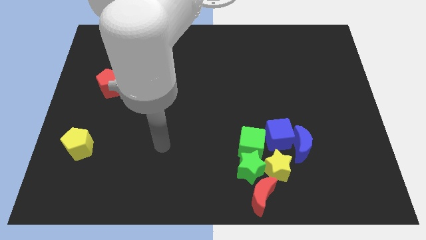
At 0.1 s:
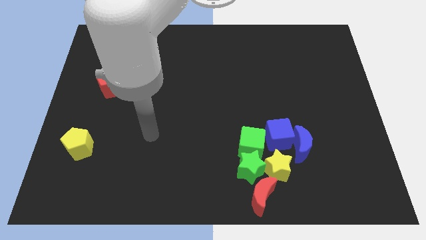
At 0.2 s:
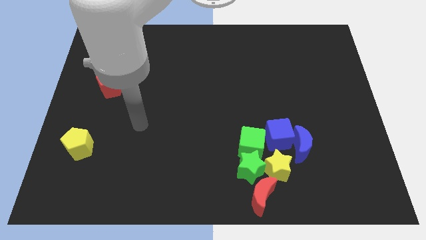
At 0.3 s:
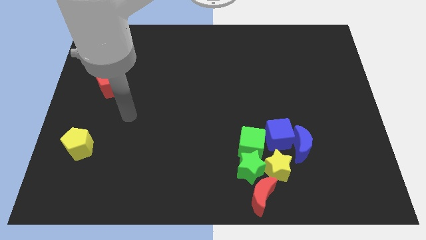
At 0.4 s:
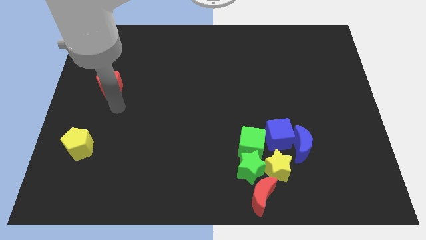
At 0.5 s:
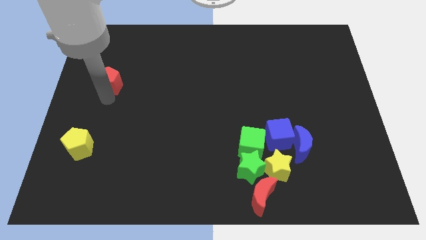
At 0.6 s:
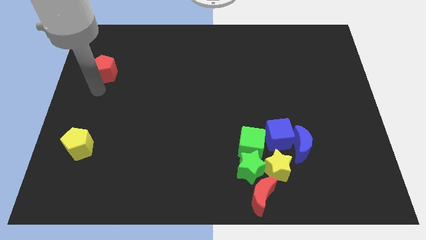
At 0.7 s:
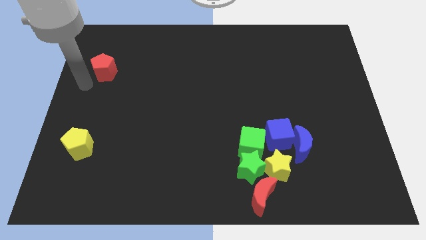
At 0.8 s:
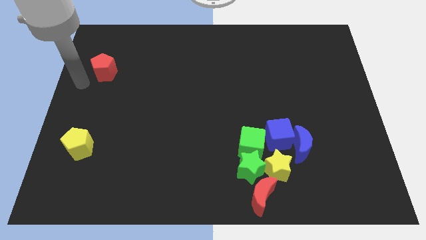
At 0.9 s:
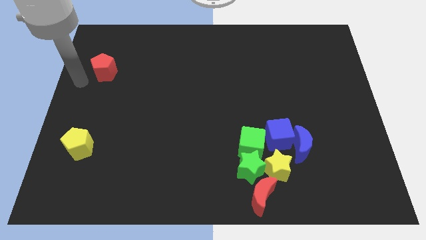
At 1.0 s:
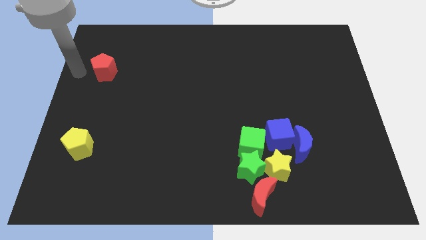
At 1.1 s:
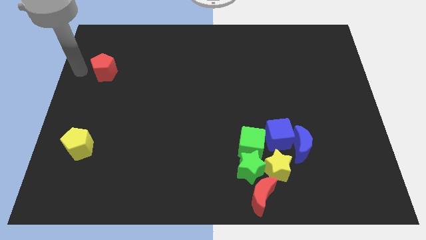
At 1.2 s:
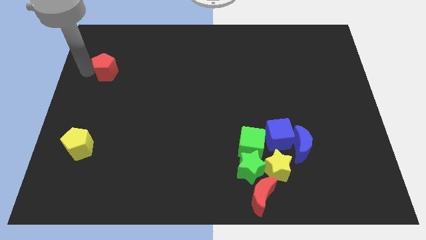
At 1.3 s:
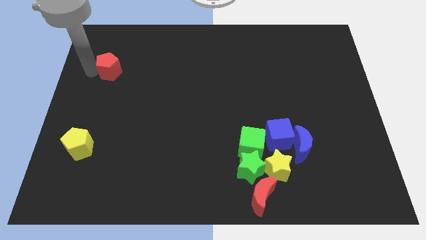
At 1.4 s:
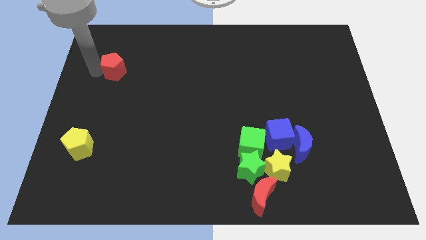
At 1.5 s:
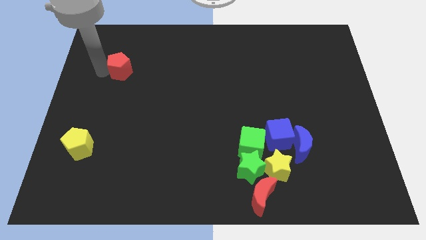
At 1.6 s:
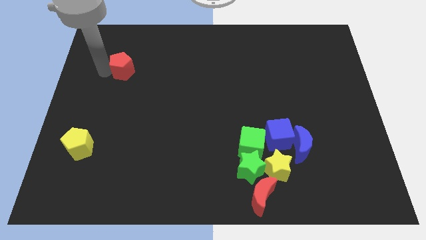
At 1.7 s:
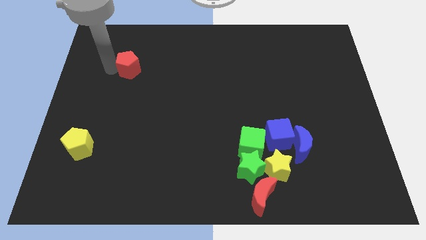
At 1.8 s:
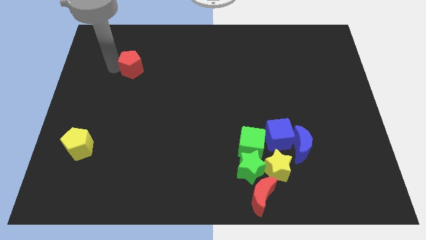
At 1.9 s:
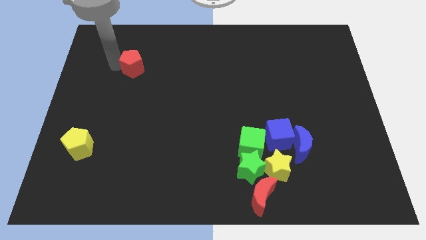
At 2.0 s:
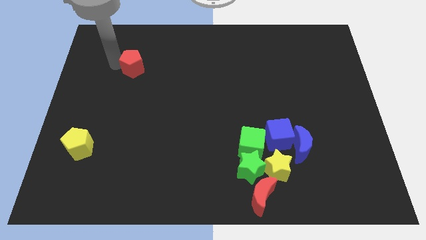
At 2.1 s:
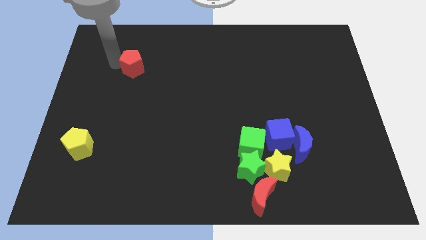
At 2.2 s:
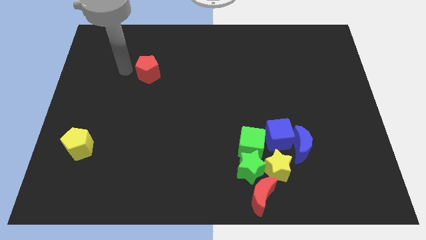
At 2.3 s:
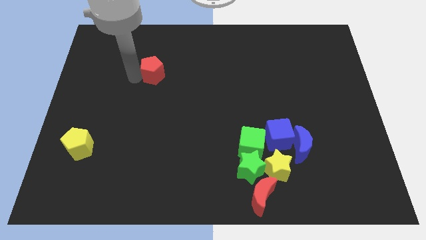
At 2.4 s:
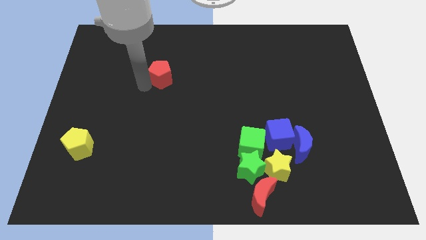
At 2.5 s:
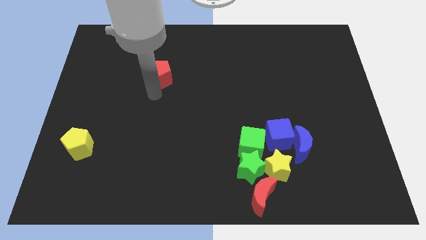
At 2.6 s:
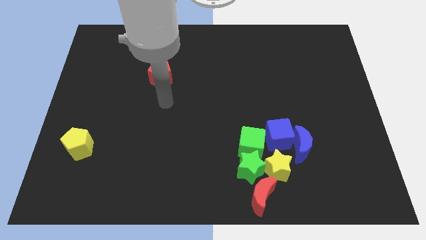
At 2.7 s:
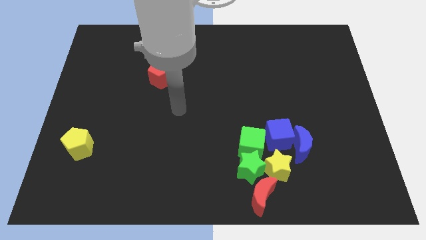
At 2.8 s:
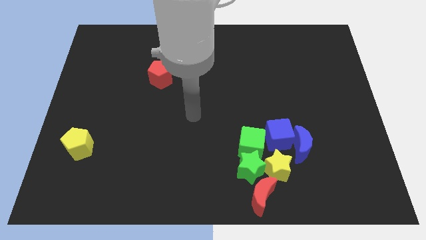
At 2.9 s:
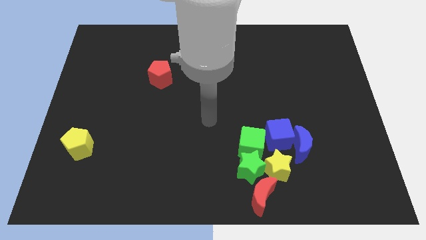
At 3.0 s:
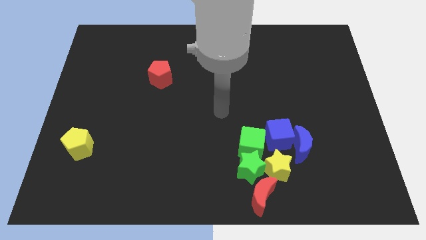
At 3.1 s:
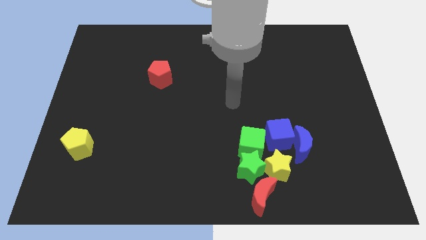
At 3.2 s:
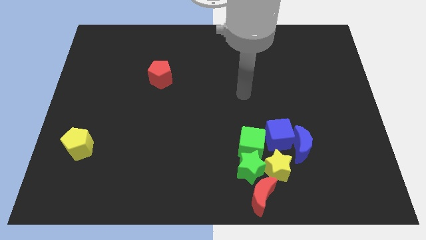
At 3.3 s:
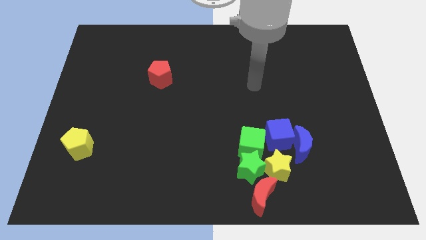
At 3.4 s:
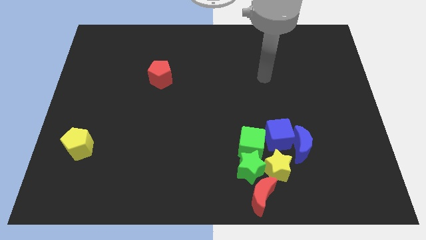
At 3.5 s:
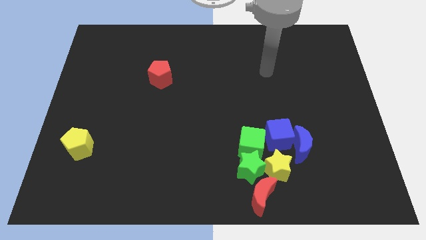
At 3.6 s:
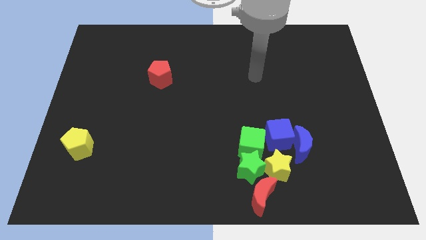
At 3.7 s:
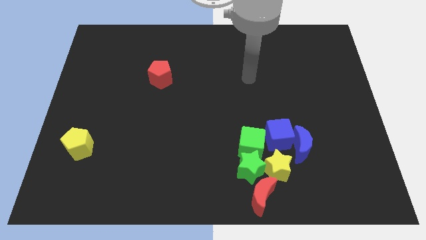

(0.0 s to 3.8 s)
place your arm parallel to red pentagon

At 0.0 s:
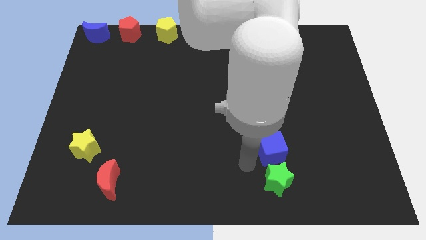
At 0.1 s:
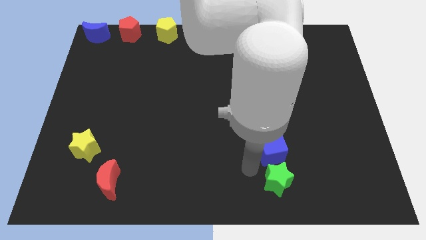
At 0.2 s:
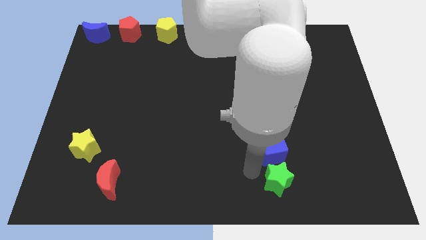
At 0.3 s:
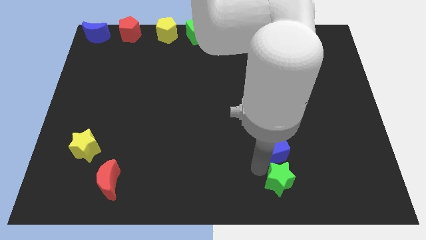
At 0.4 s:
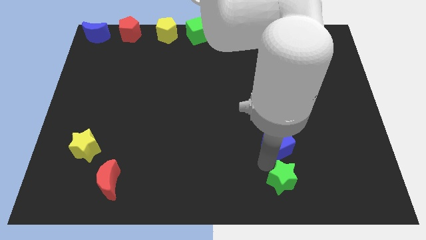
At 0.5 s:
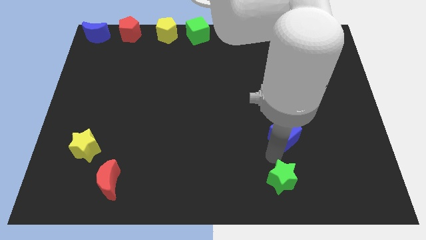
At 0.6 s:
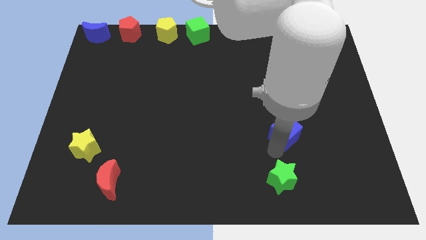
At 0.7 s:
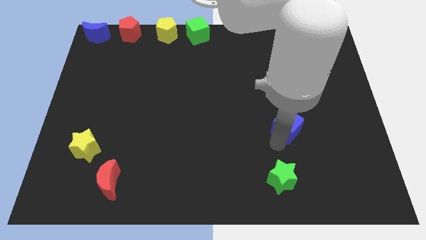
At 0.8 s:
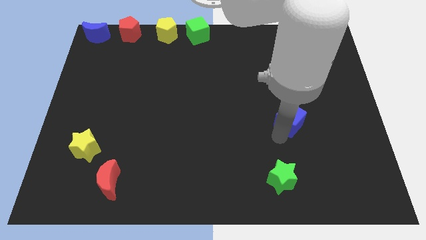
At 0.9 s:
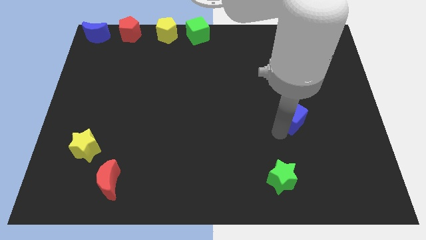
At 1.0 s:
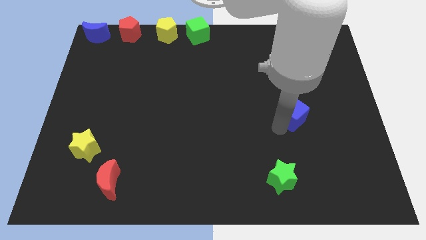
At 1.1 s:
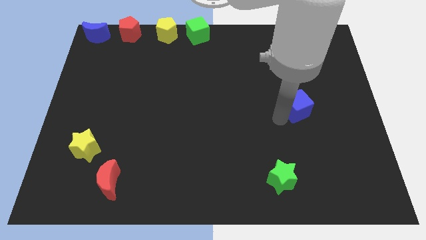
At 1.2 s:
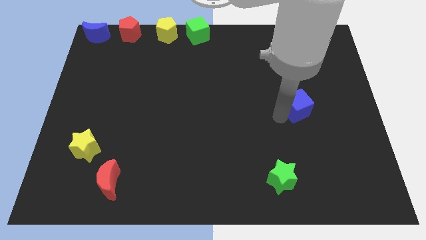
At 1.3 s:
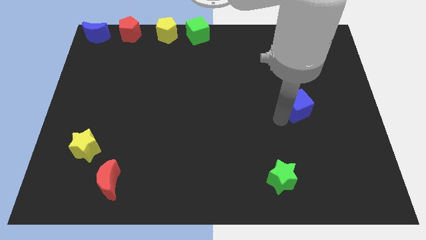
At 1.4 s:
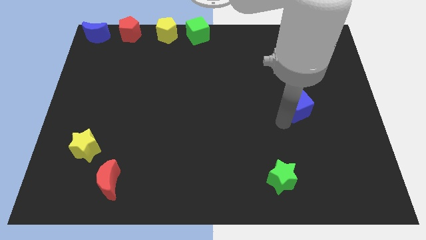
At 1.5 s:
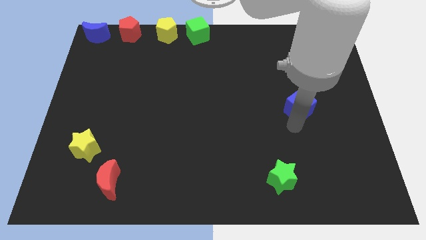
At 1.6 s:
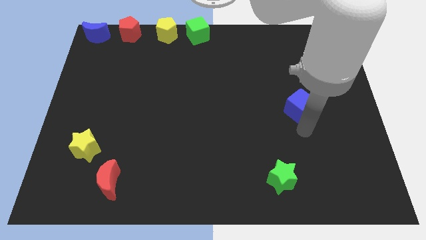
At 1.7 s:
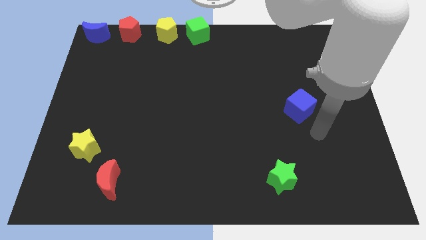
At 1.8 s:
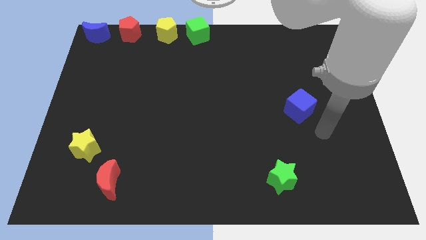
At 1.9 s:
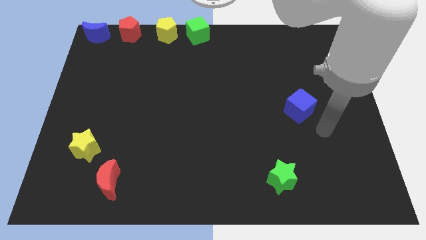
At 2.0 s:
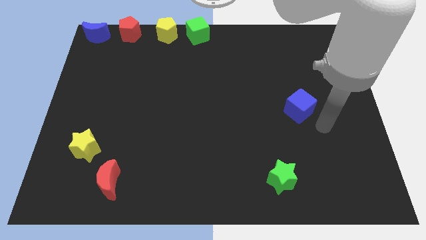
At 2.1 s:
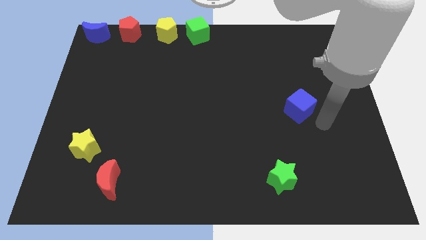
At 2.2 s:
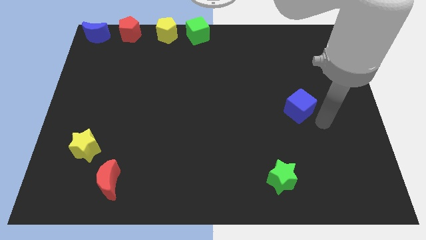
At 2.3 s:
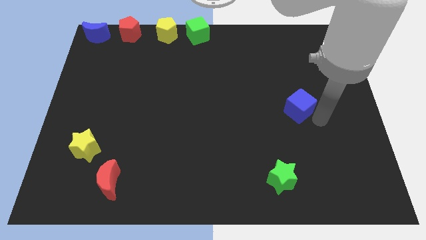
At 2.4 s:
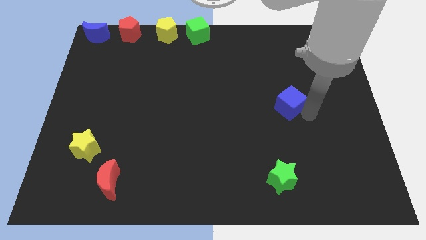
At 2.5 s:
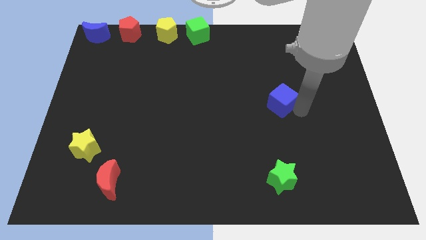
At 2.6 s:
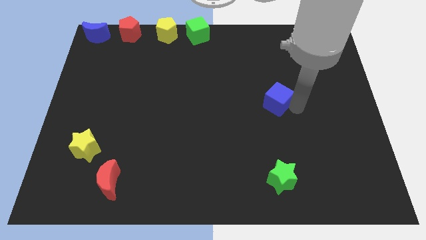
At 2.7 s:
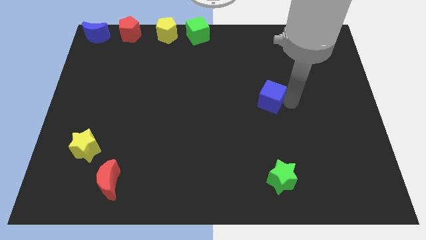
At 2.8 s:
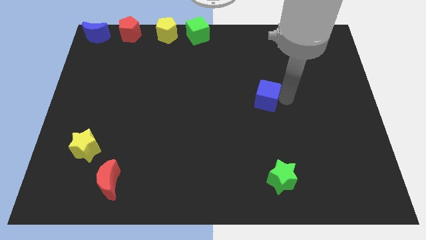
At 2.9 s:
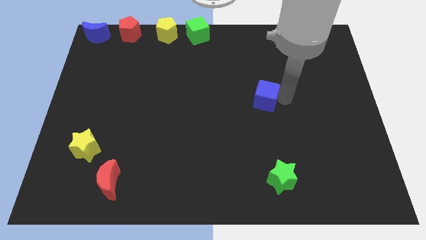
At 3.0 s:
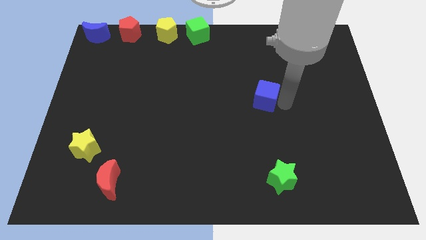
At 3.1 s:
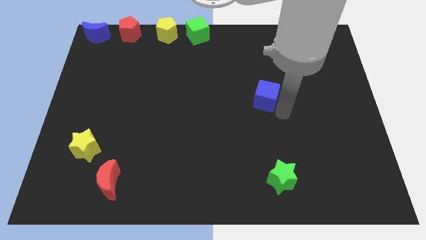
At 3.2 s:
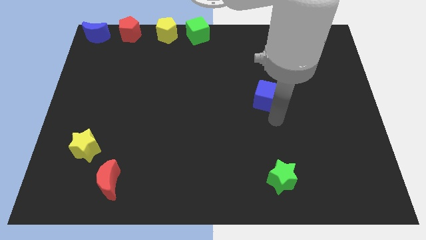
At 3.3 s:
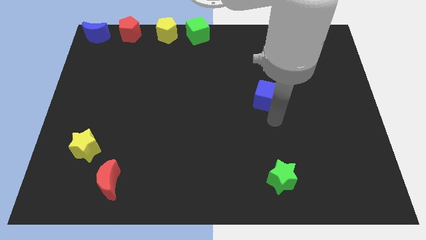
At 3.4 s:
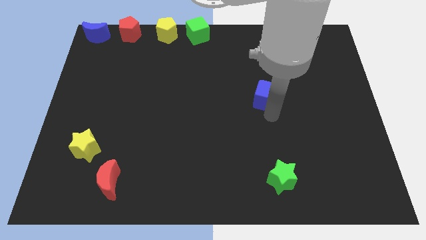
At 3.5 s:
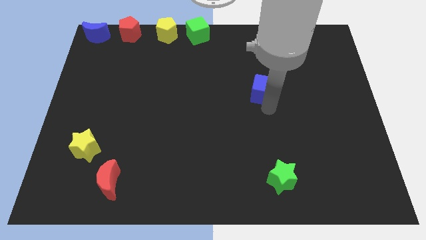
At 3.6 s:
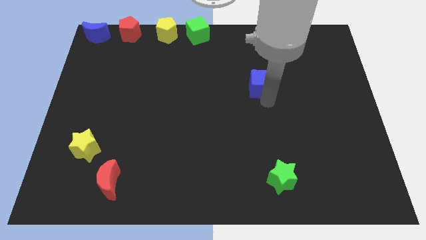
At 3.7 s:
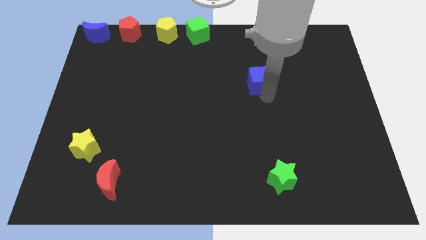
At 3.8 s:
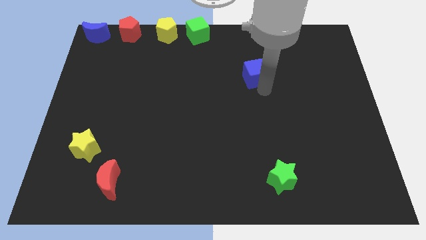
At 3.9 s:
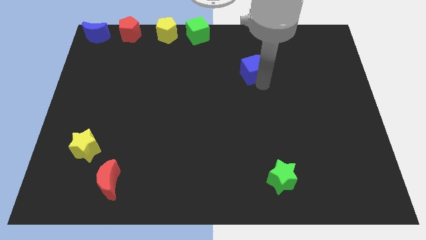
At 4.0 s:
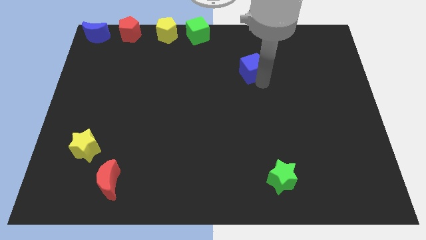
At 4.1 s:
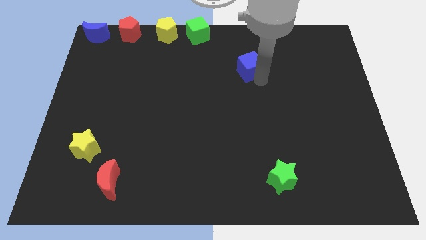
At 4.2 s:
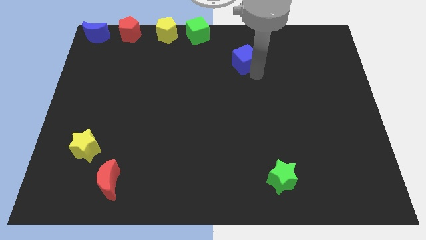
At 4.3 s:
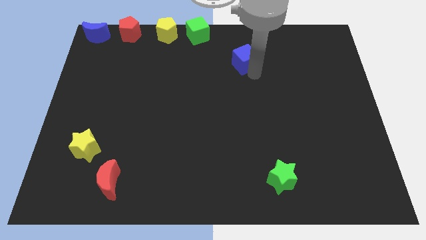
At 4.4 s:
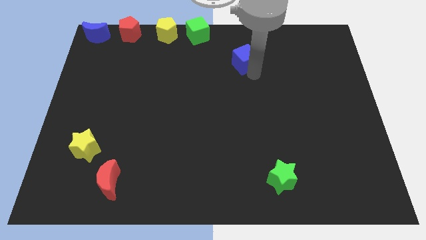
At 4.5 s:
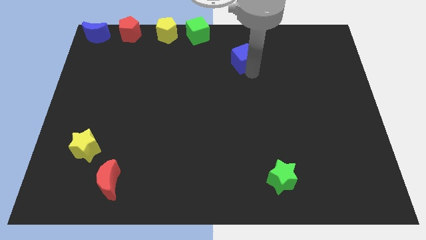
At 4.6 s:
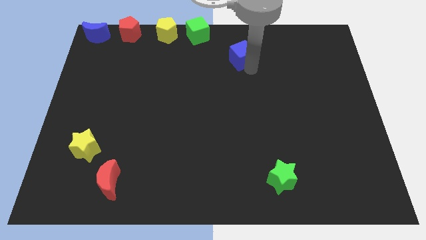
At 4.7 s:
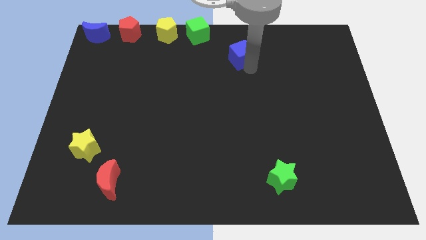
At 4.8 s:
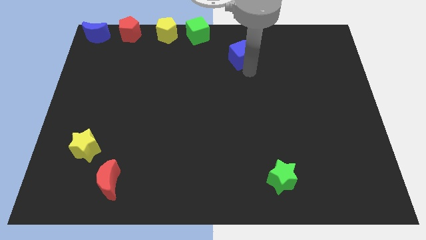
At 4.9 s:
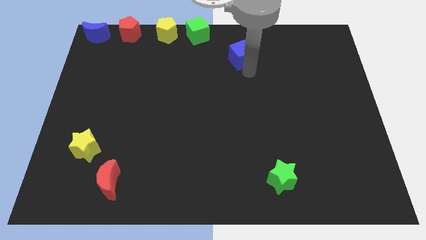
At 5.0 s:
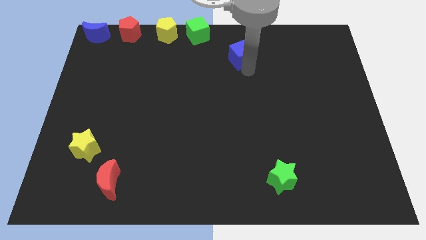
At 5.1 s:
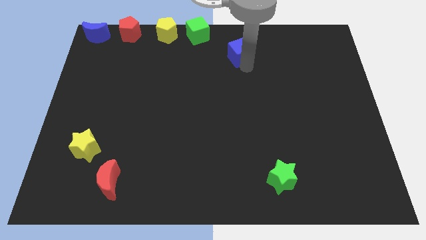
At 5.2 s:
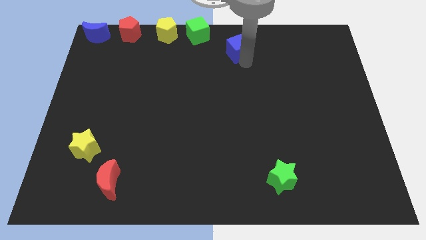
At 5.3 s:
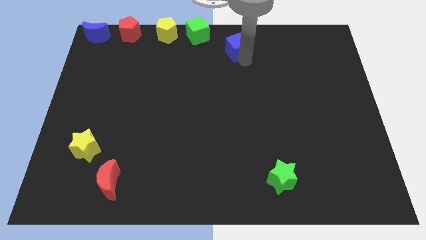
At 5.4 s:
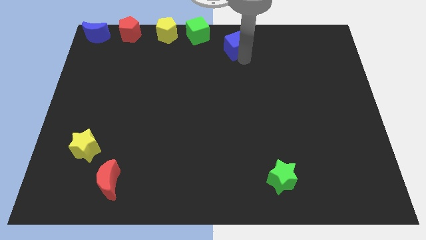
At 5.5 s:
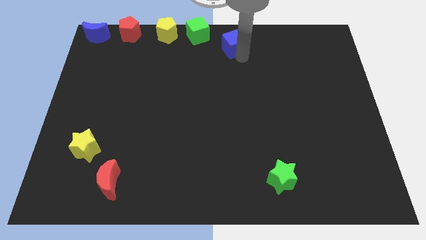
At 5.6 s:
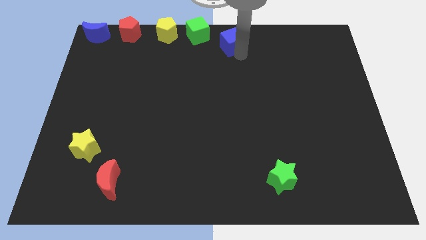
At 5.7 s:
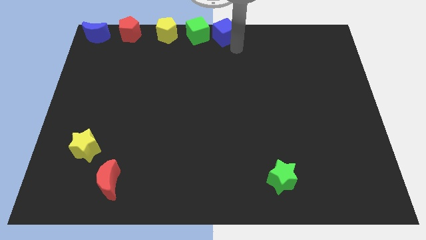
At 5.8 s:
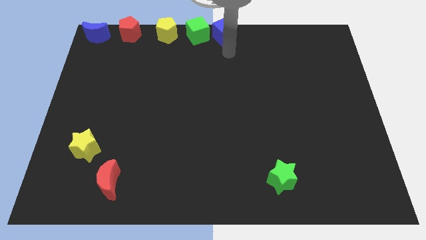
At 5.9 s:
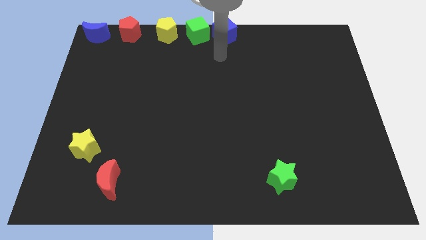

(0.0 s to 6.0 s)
push the blue cube to the right side of the green cube
